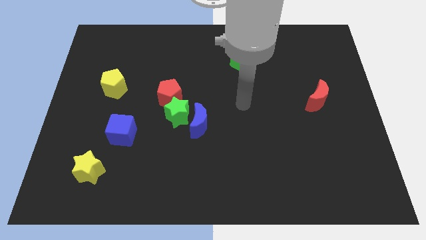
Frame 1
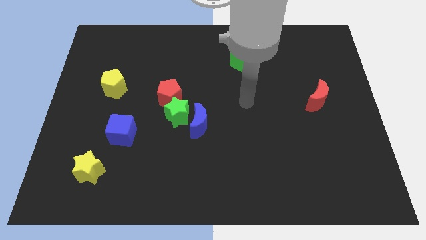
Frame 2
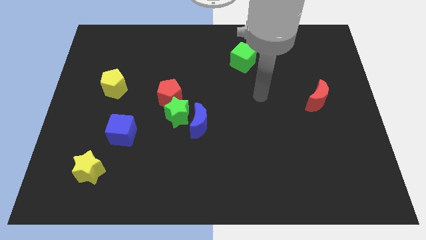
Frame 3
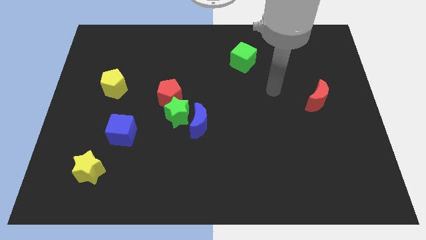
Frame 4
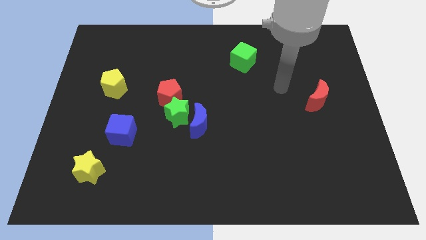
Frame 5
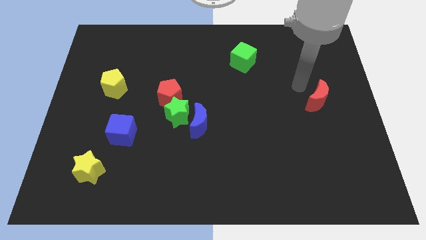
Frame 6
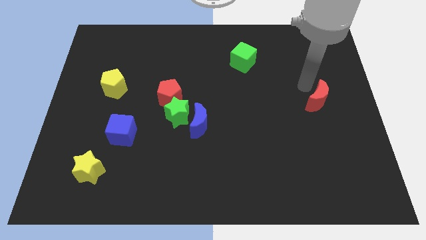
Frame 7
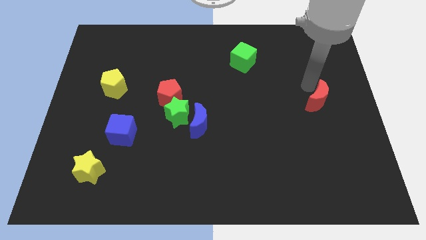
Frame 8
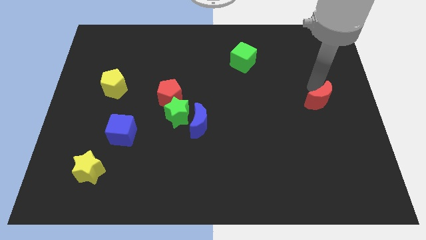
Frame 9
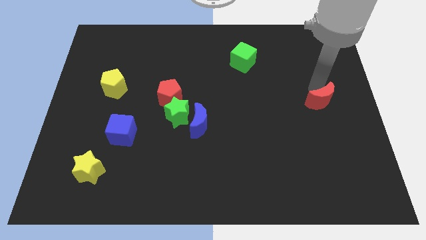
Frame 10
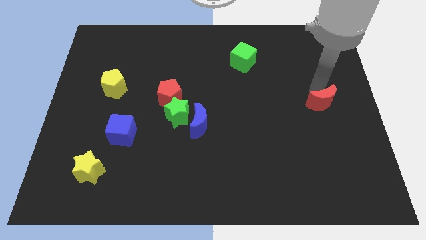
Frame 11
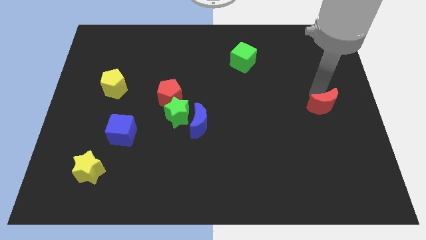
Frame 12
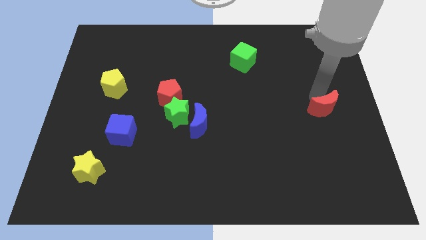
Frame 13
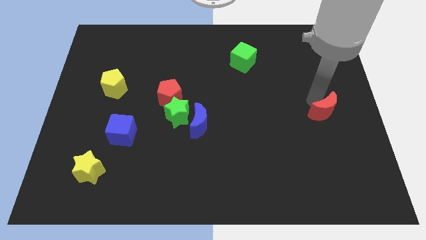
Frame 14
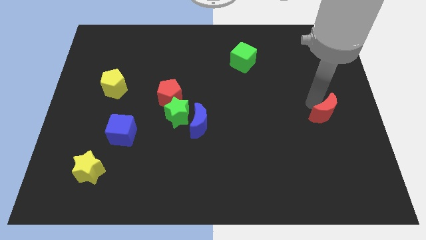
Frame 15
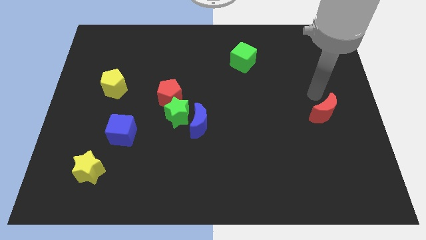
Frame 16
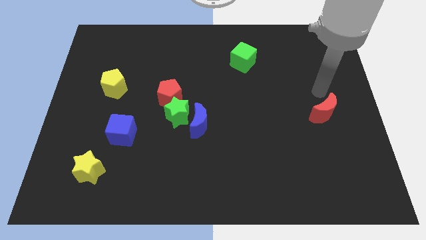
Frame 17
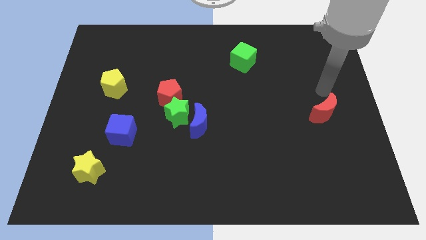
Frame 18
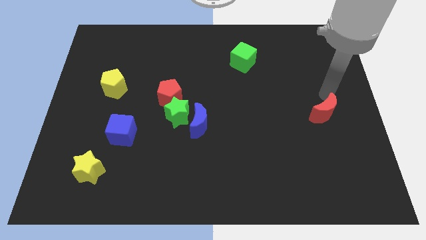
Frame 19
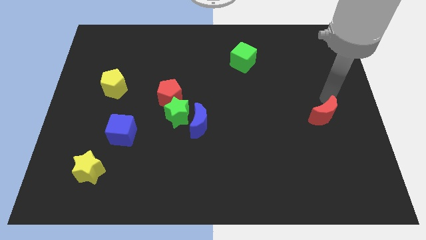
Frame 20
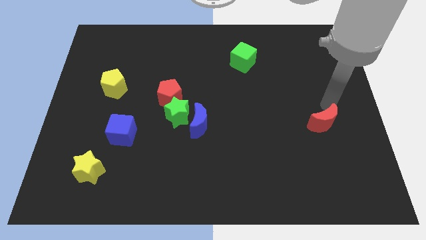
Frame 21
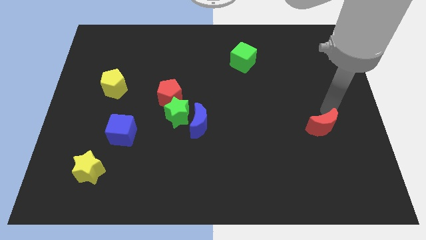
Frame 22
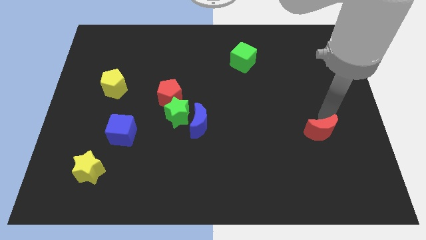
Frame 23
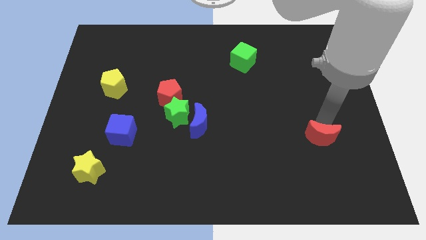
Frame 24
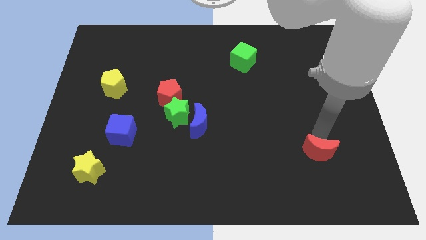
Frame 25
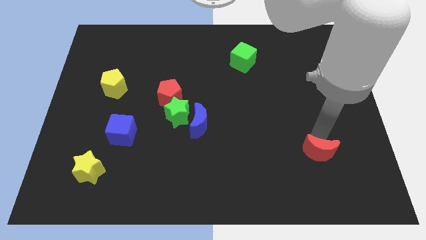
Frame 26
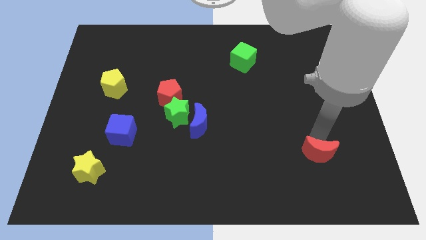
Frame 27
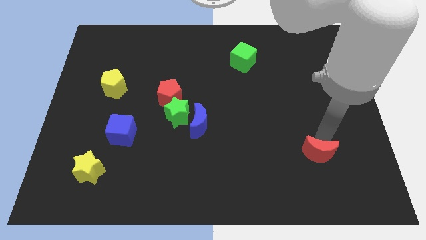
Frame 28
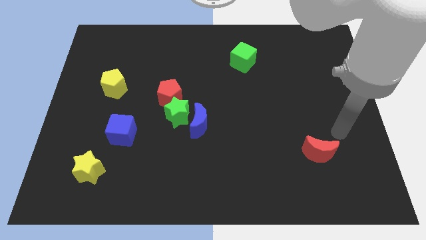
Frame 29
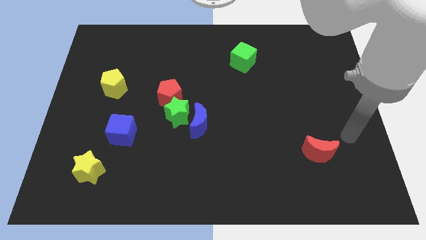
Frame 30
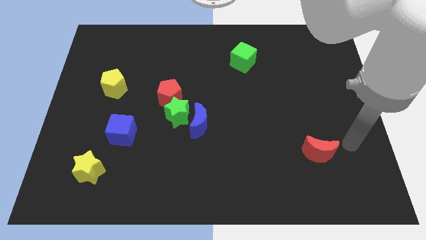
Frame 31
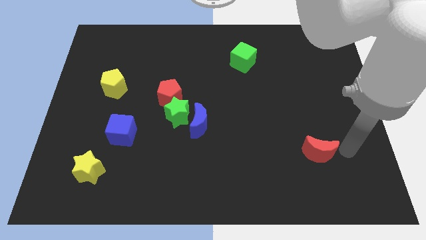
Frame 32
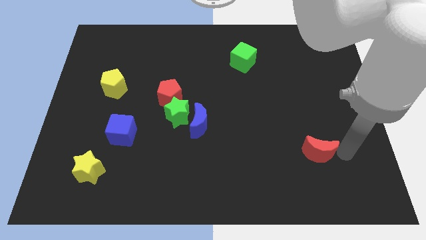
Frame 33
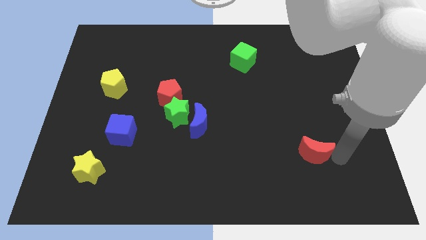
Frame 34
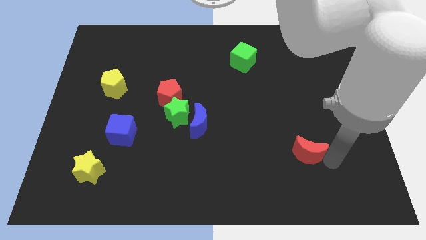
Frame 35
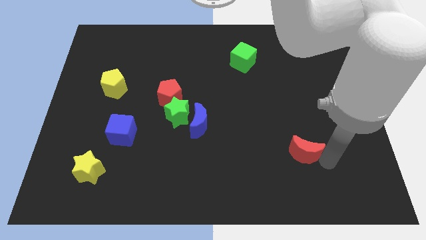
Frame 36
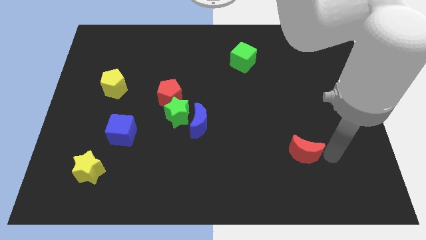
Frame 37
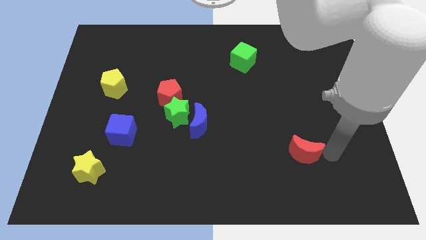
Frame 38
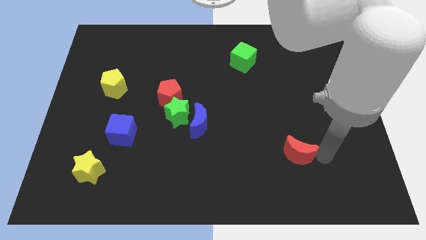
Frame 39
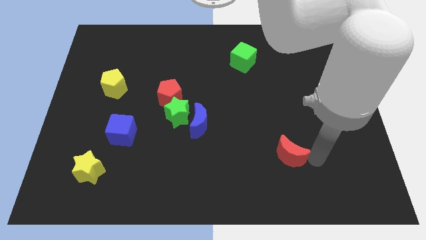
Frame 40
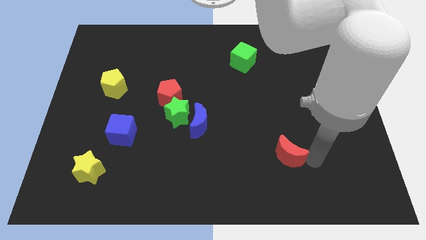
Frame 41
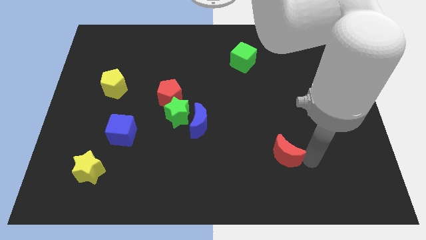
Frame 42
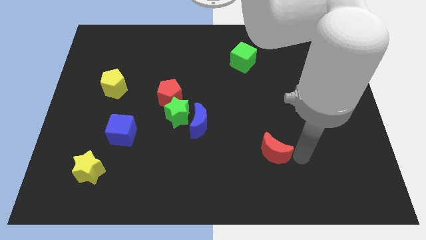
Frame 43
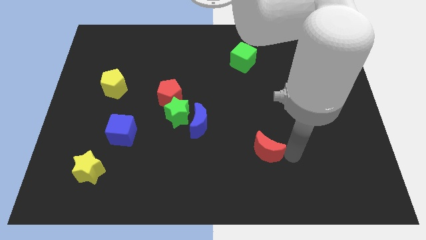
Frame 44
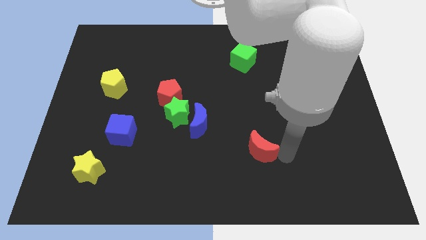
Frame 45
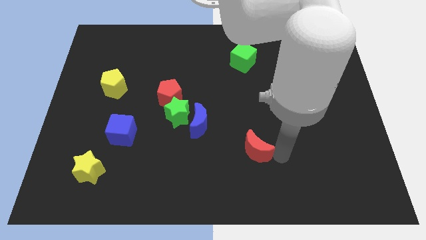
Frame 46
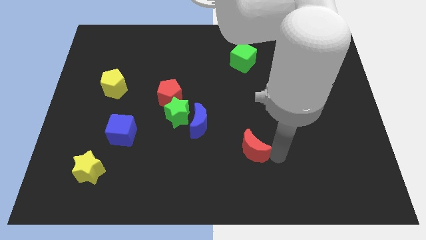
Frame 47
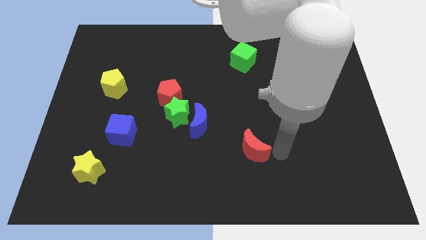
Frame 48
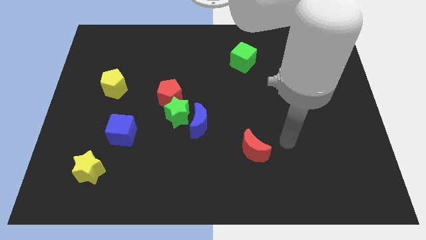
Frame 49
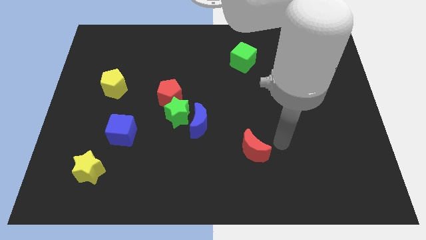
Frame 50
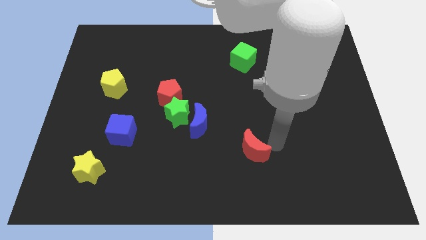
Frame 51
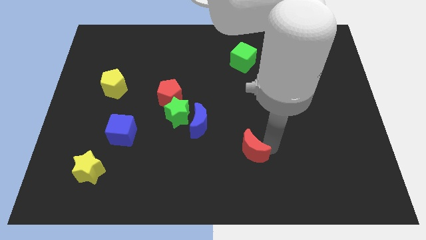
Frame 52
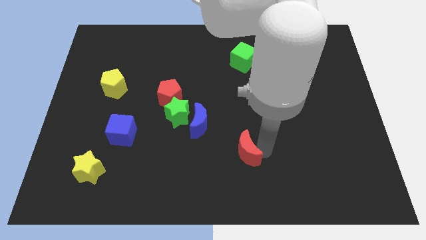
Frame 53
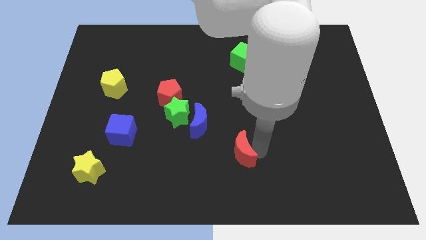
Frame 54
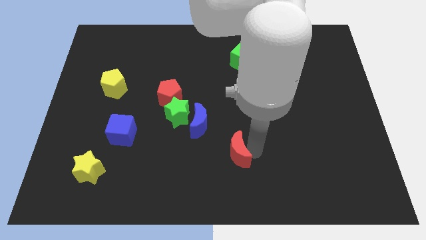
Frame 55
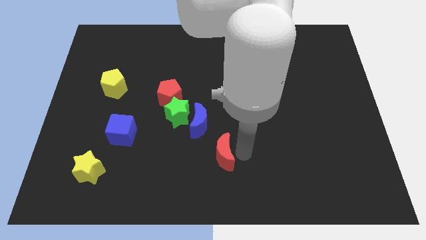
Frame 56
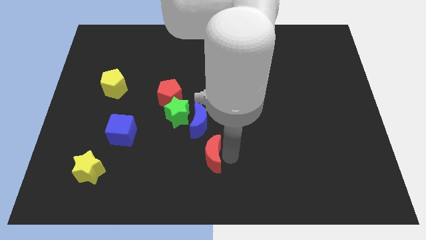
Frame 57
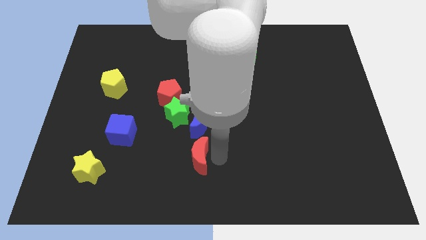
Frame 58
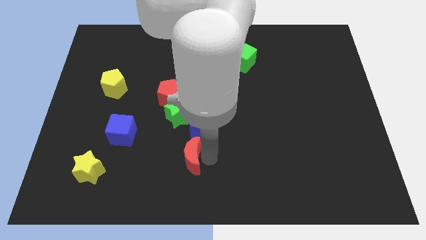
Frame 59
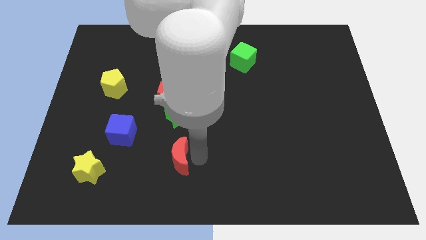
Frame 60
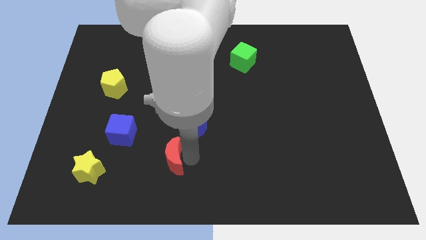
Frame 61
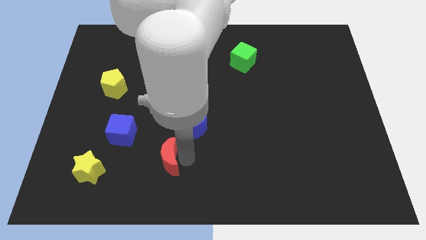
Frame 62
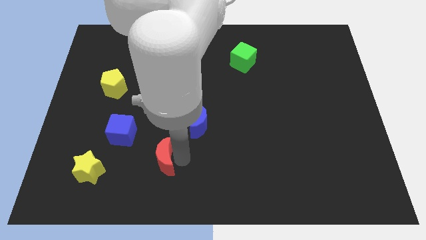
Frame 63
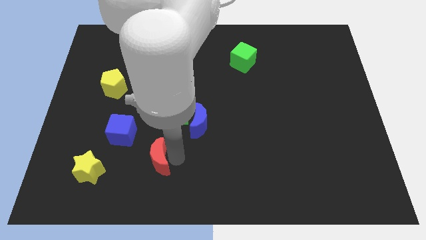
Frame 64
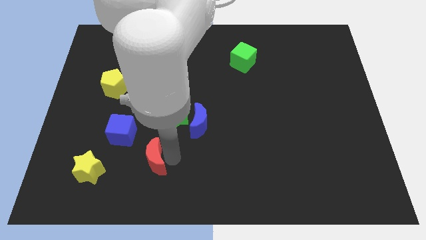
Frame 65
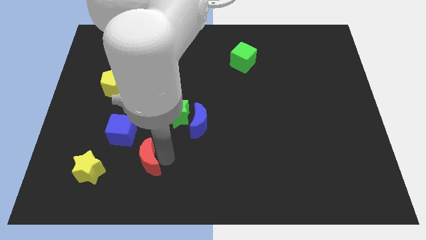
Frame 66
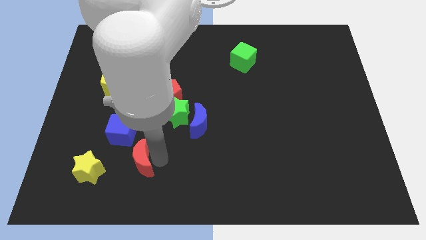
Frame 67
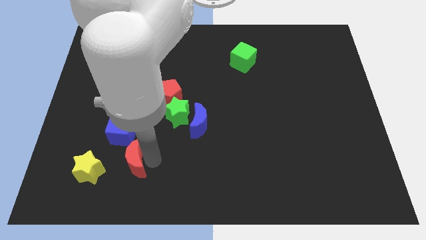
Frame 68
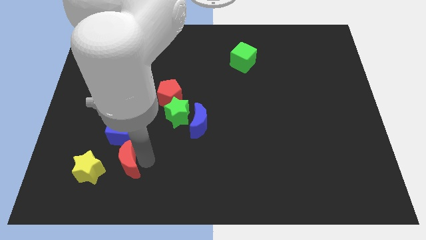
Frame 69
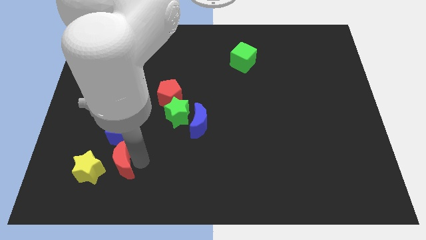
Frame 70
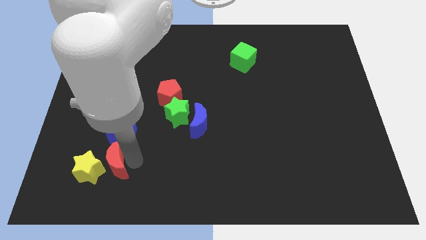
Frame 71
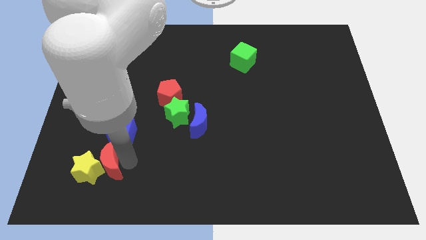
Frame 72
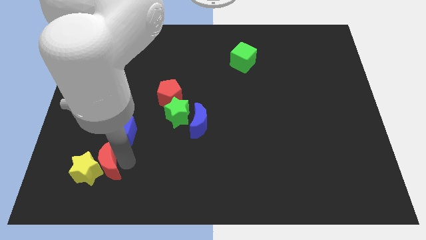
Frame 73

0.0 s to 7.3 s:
put the red moon to the yellow star

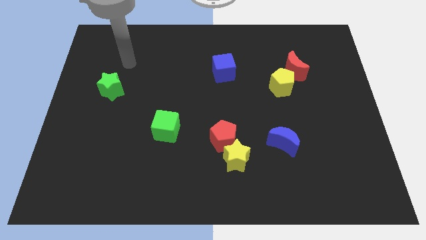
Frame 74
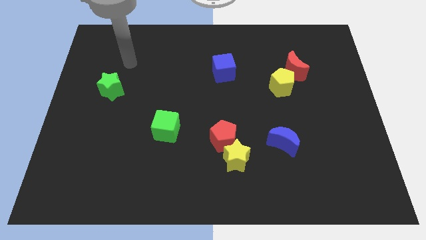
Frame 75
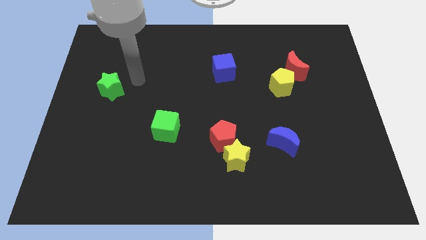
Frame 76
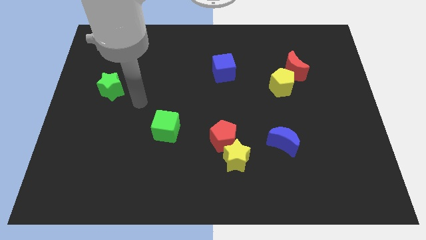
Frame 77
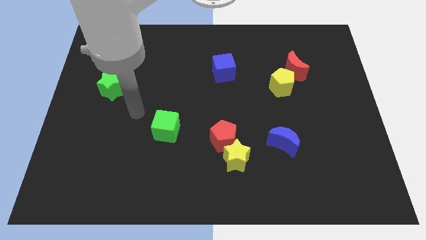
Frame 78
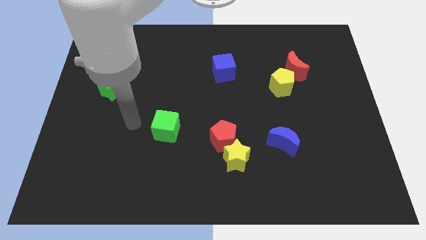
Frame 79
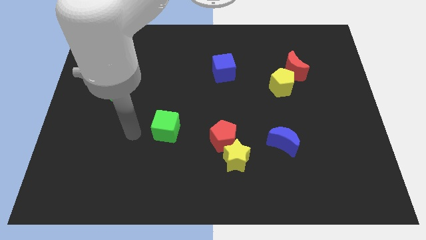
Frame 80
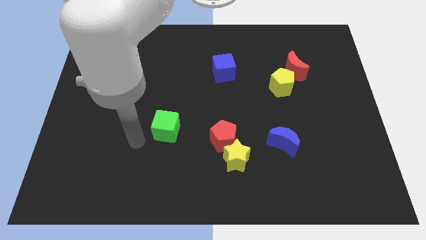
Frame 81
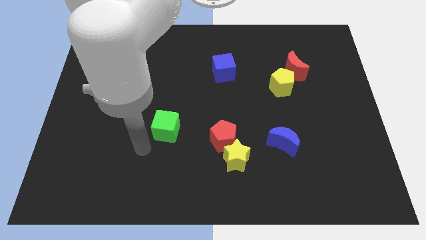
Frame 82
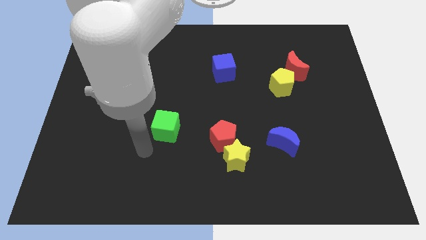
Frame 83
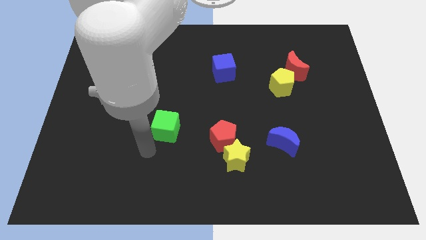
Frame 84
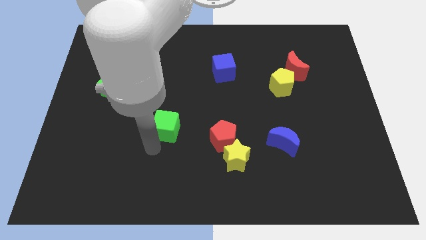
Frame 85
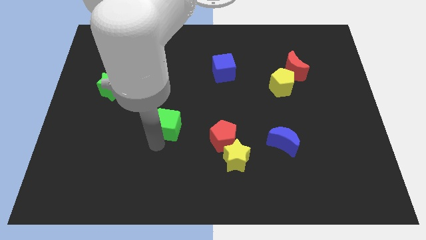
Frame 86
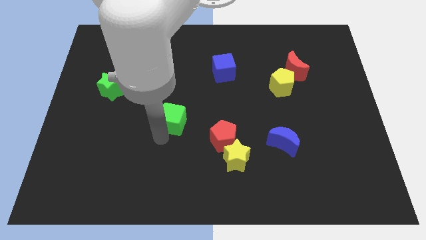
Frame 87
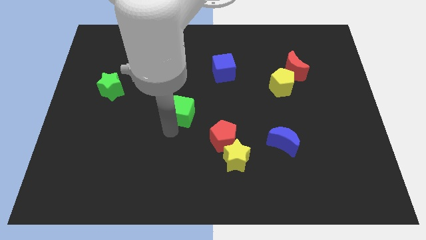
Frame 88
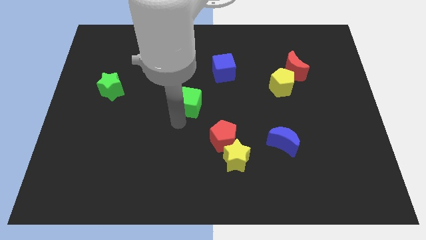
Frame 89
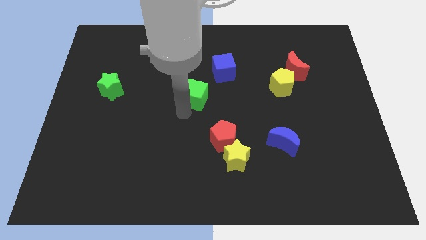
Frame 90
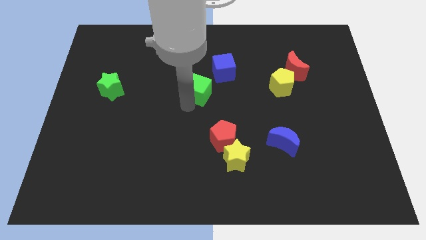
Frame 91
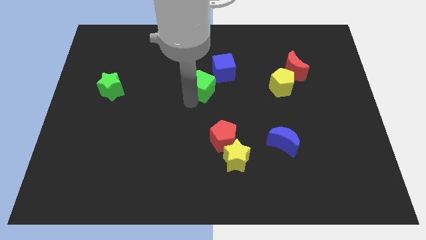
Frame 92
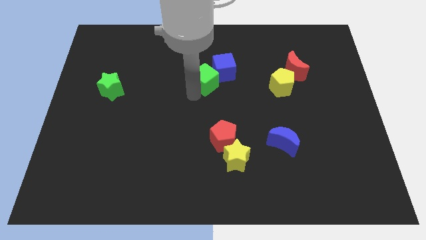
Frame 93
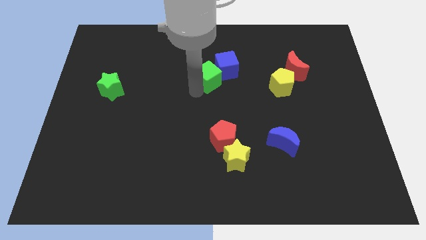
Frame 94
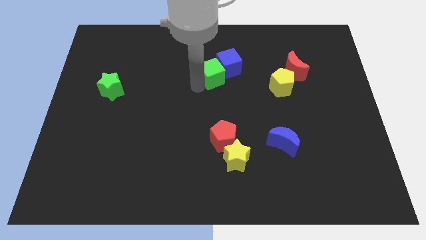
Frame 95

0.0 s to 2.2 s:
put the green cube to the blue cube
